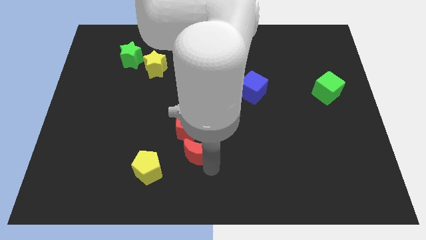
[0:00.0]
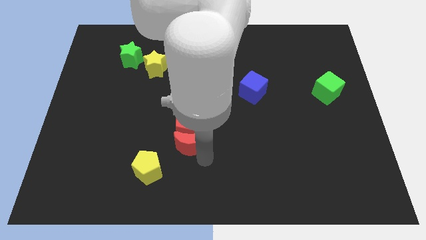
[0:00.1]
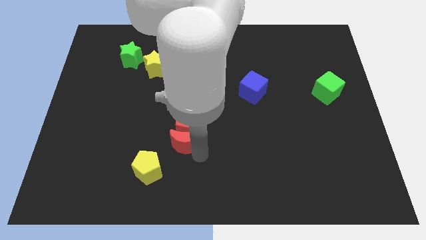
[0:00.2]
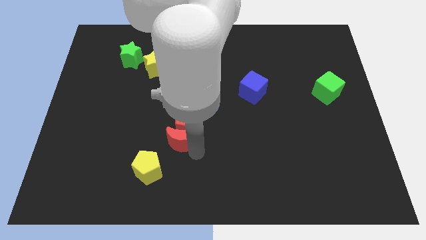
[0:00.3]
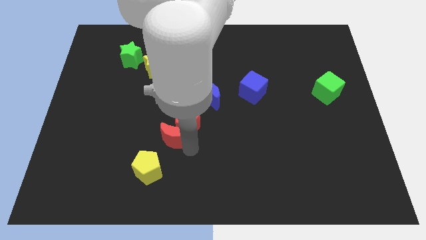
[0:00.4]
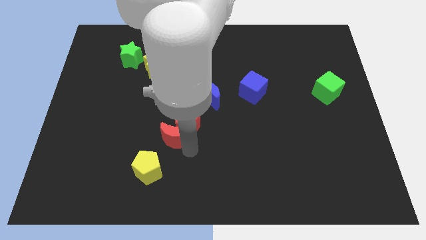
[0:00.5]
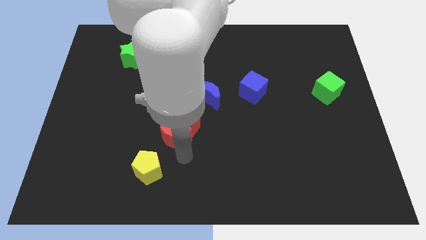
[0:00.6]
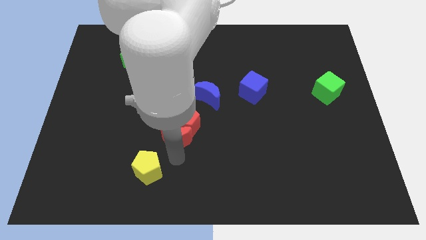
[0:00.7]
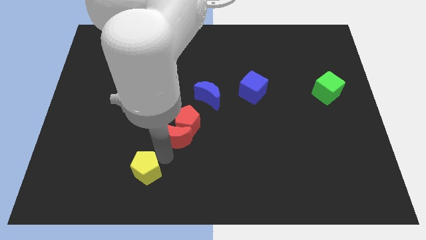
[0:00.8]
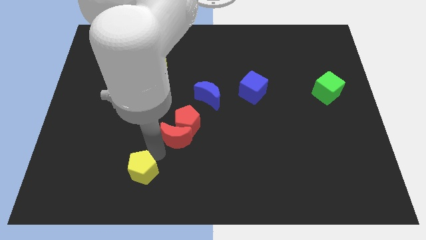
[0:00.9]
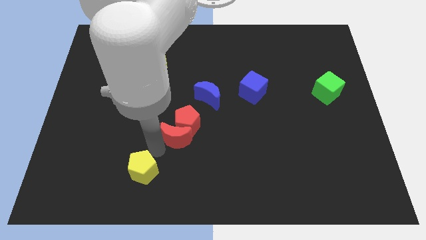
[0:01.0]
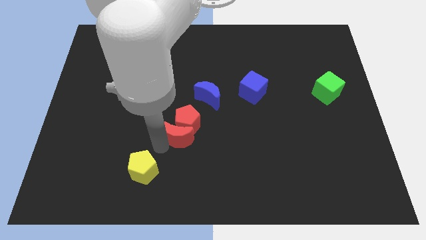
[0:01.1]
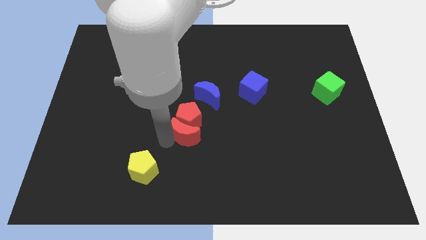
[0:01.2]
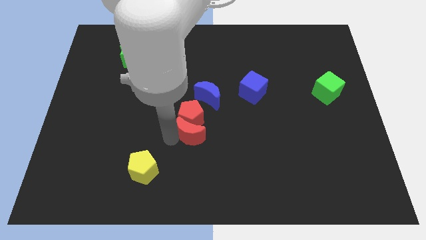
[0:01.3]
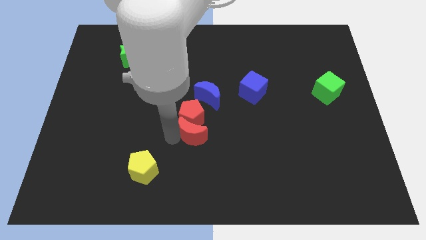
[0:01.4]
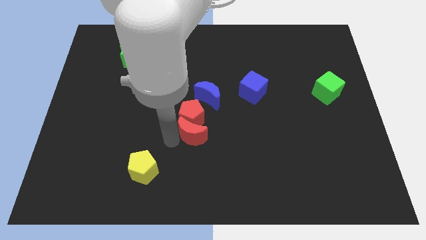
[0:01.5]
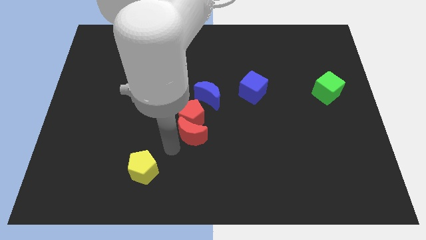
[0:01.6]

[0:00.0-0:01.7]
move the red crescent along with red pentagon to the center of the board

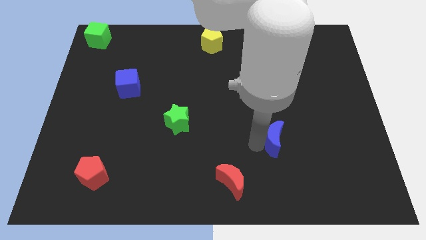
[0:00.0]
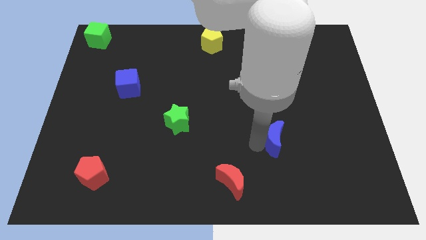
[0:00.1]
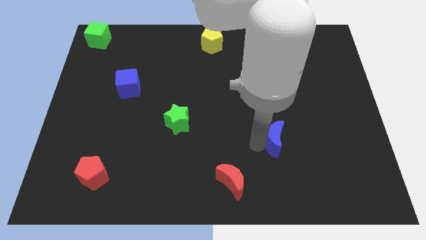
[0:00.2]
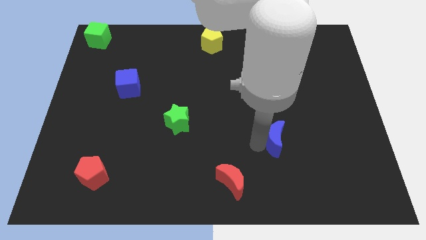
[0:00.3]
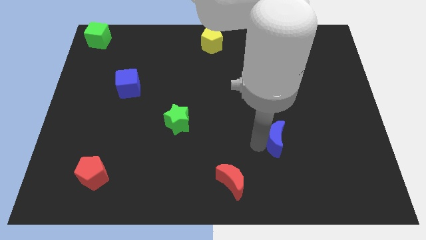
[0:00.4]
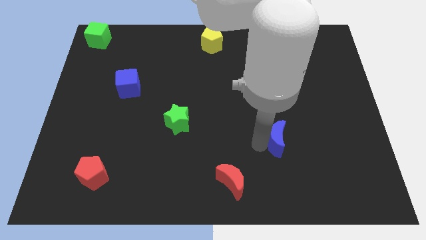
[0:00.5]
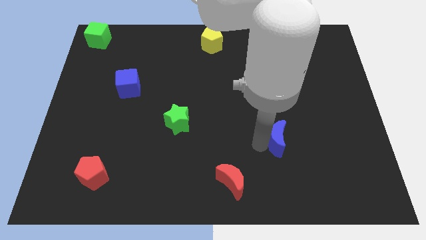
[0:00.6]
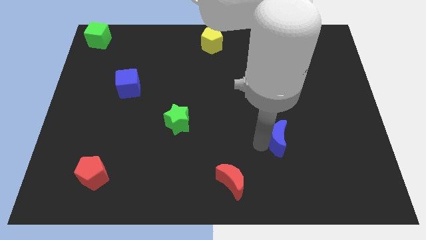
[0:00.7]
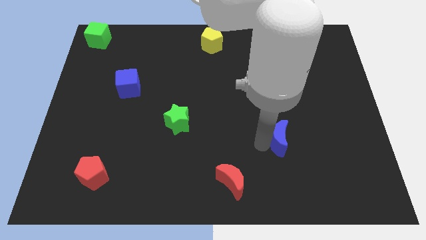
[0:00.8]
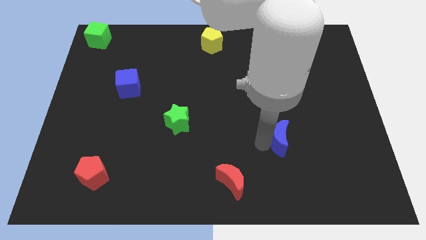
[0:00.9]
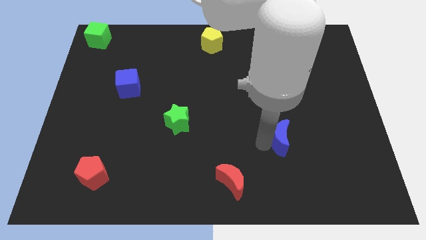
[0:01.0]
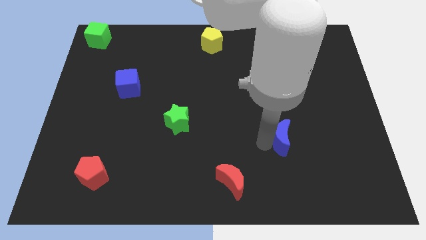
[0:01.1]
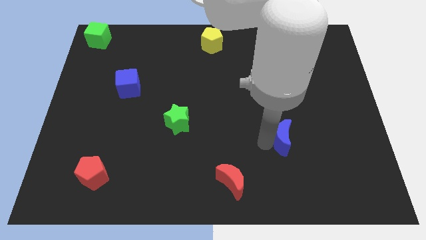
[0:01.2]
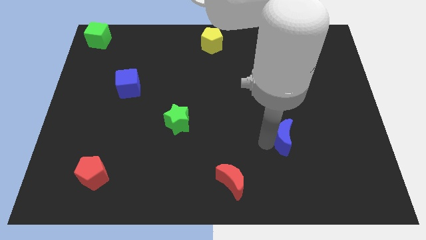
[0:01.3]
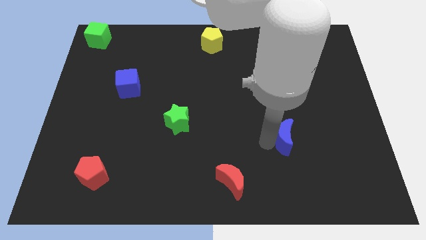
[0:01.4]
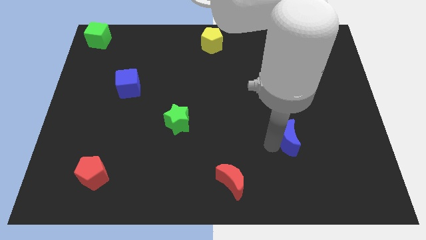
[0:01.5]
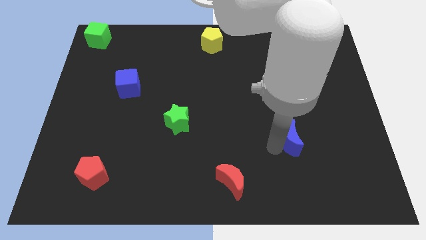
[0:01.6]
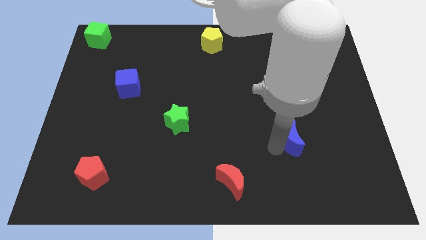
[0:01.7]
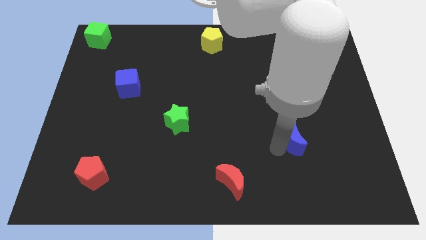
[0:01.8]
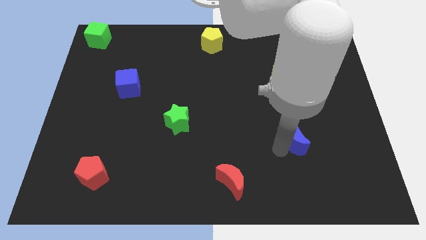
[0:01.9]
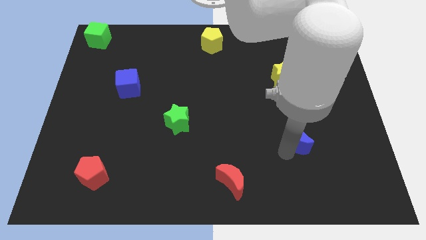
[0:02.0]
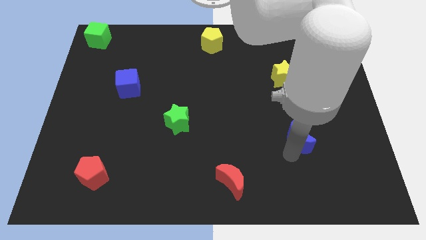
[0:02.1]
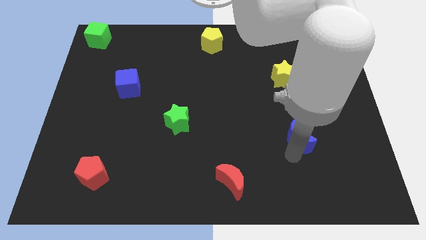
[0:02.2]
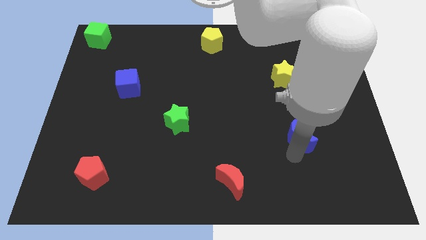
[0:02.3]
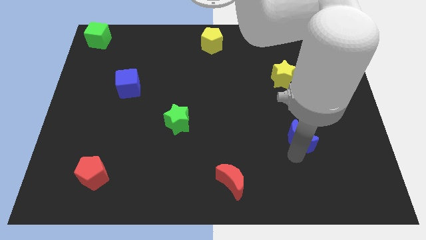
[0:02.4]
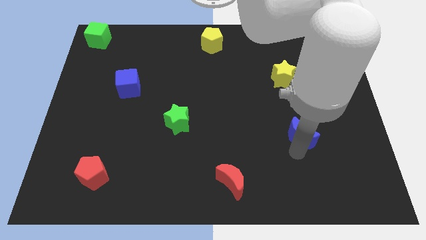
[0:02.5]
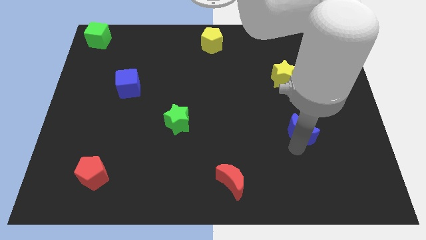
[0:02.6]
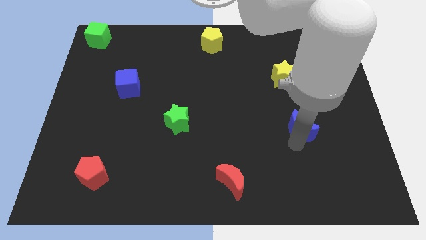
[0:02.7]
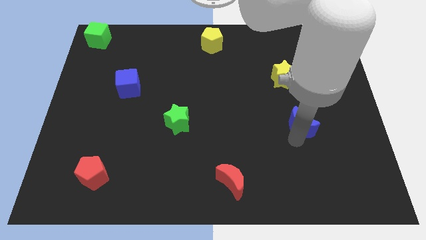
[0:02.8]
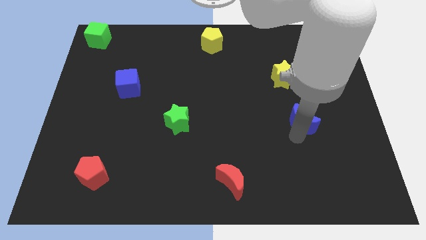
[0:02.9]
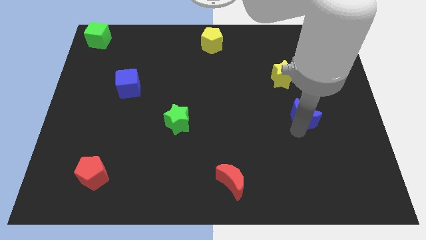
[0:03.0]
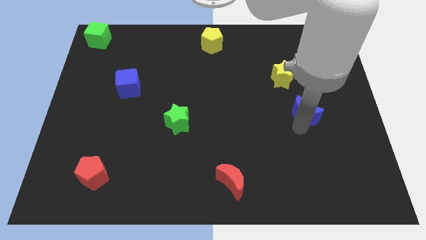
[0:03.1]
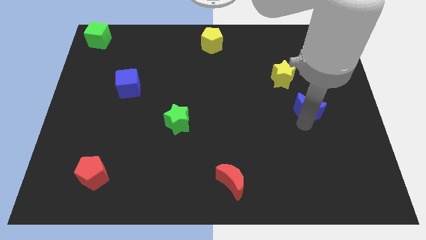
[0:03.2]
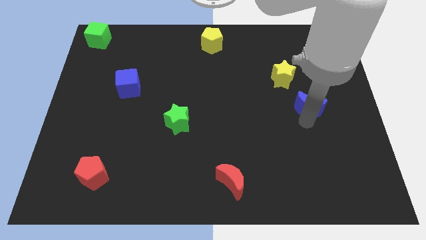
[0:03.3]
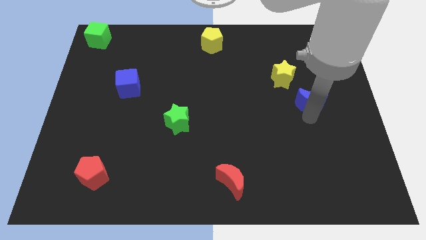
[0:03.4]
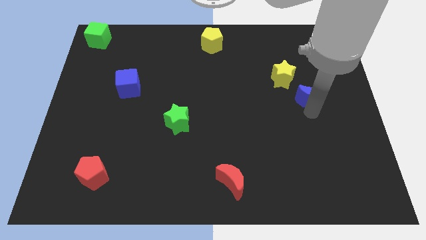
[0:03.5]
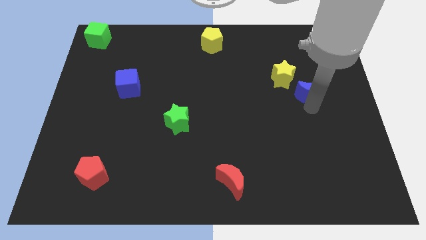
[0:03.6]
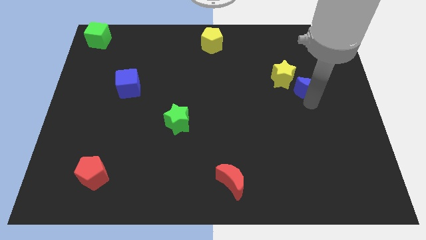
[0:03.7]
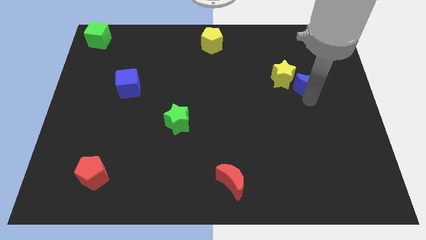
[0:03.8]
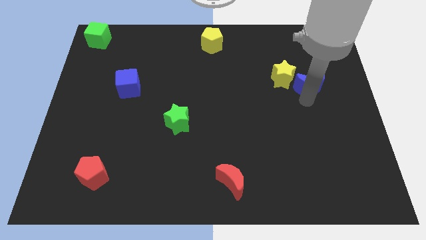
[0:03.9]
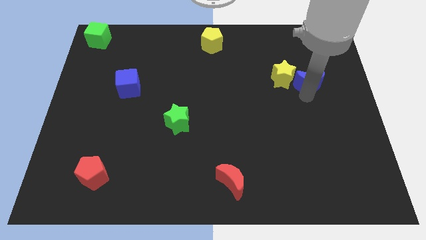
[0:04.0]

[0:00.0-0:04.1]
place blue moon to the right of yellow star

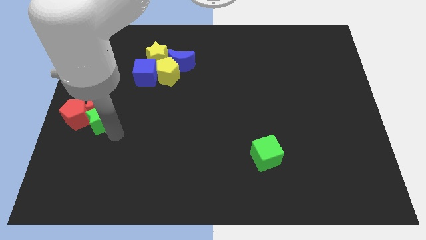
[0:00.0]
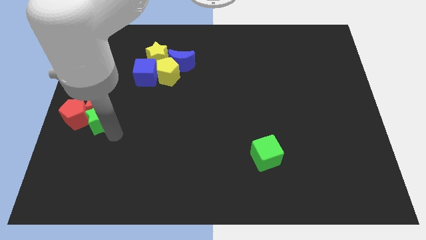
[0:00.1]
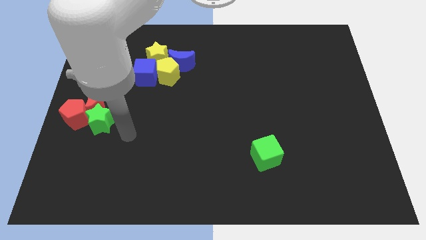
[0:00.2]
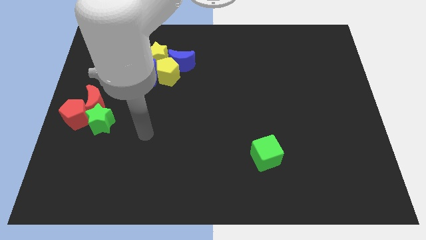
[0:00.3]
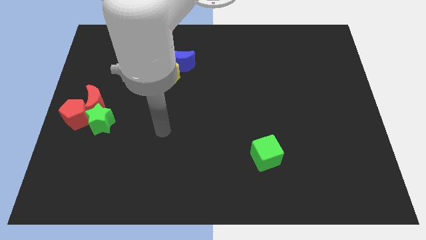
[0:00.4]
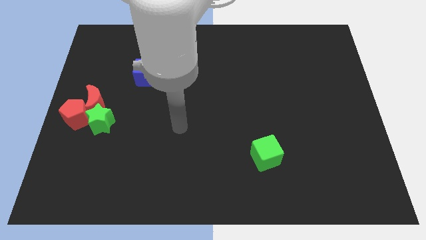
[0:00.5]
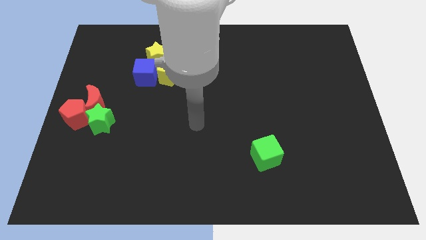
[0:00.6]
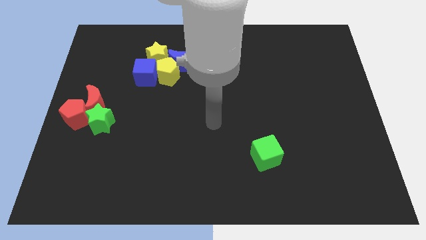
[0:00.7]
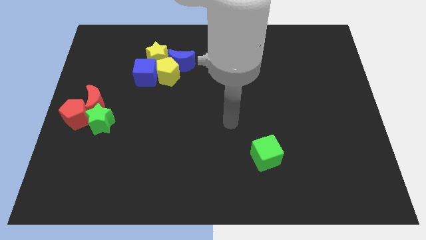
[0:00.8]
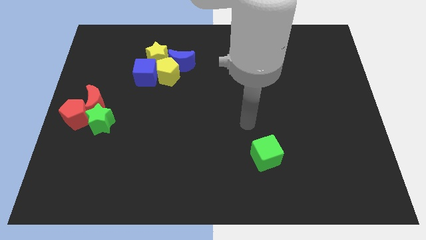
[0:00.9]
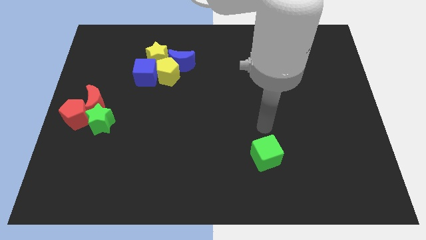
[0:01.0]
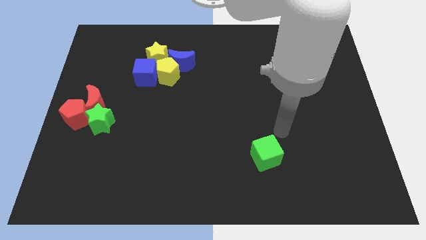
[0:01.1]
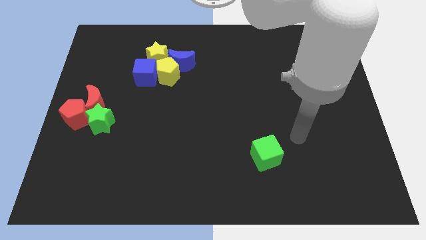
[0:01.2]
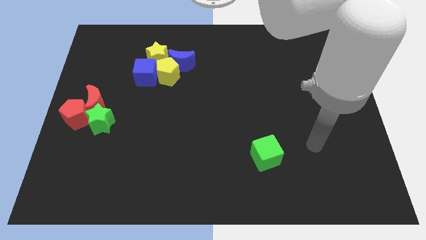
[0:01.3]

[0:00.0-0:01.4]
move your arm away from the green star

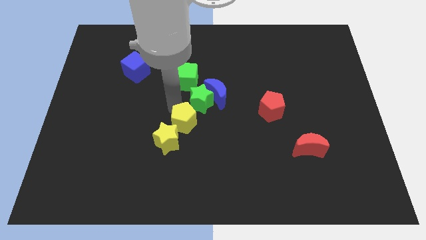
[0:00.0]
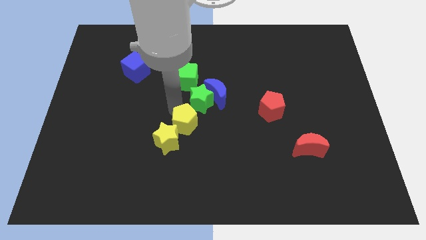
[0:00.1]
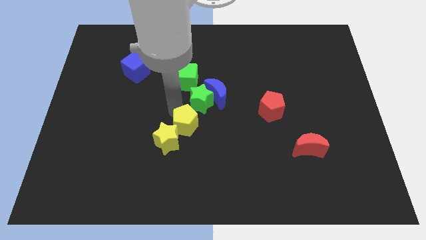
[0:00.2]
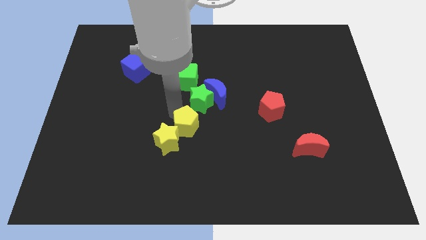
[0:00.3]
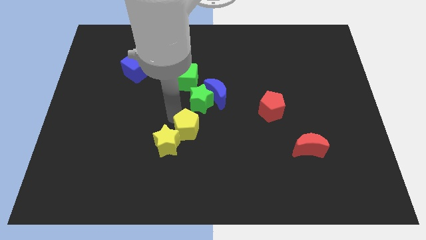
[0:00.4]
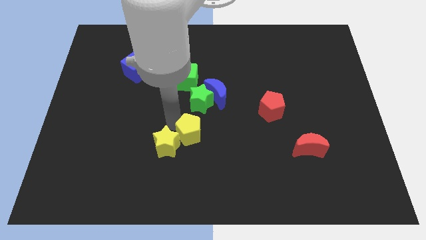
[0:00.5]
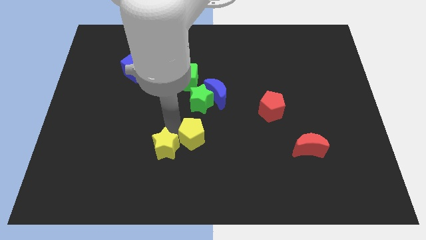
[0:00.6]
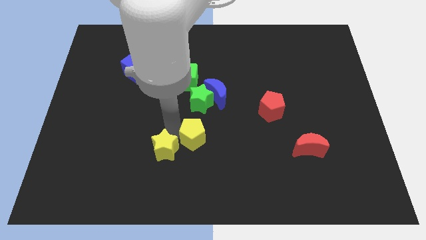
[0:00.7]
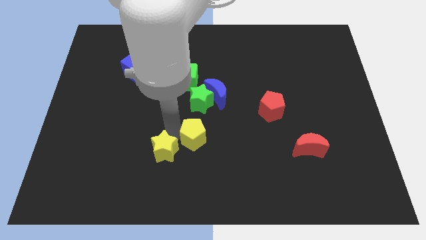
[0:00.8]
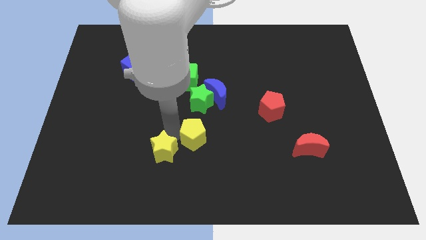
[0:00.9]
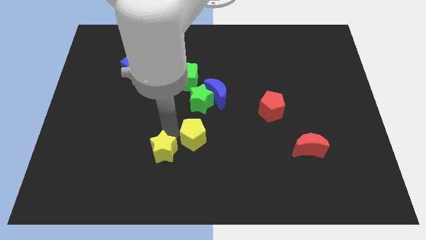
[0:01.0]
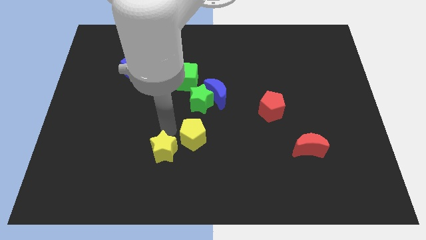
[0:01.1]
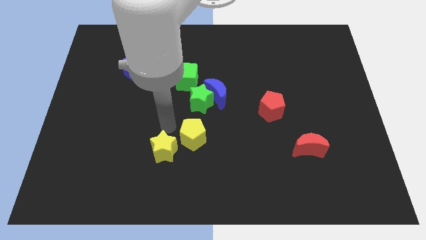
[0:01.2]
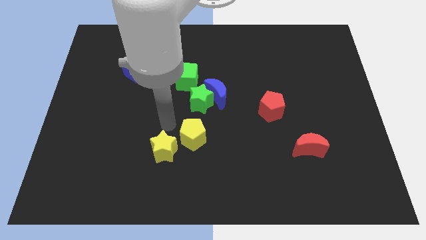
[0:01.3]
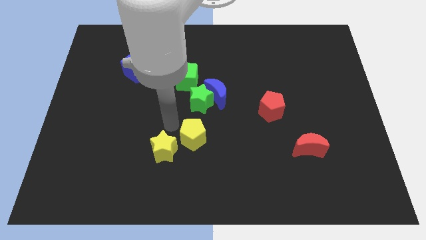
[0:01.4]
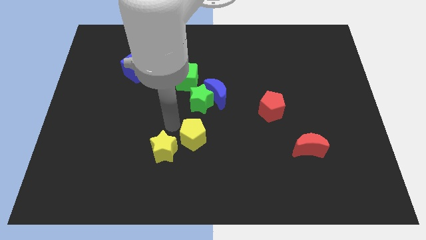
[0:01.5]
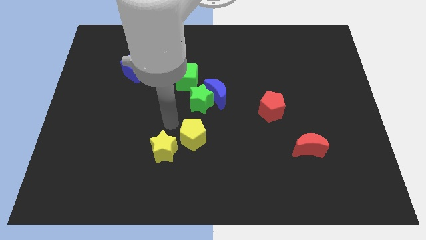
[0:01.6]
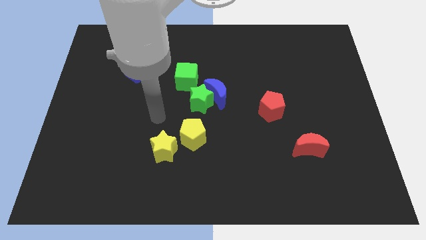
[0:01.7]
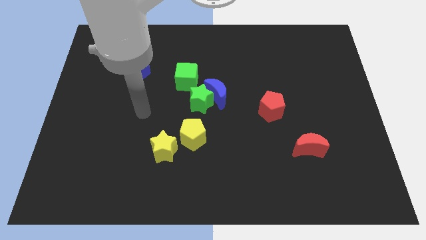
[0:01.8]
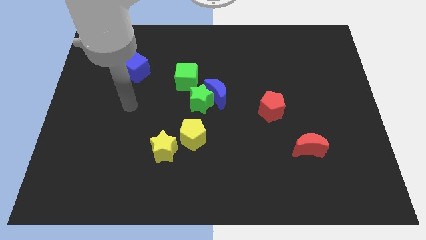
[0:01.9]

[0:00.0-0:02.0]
place the yellow pentagon to the right of the yellow star
